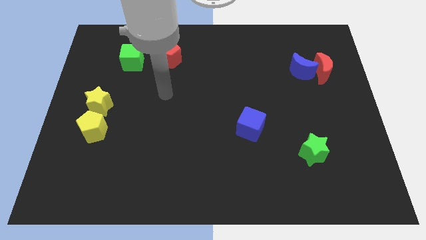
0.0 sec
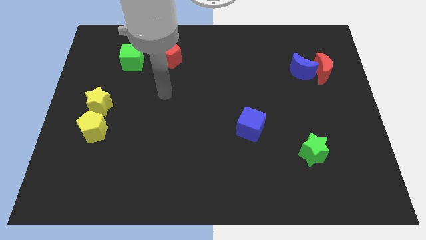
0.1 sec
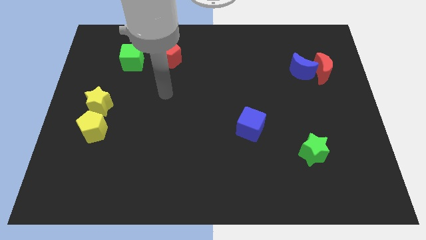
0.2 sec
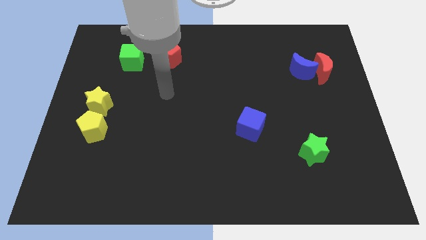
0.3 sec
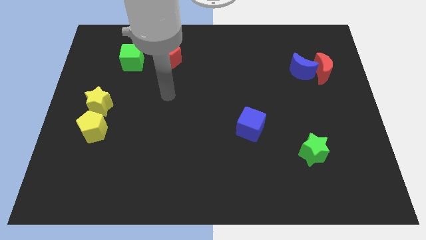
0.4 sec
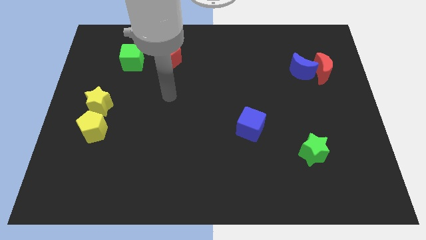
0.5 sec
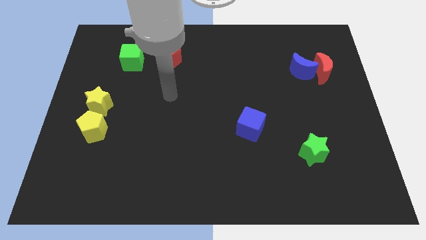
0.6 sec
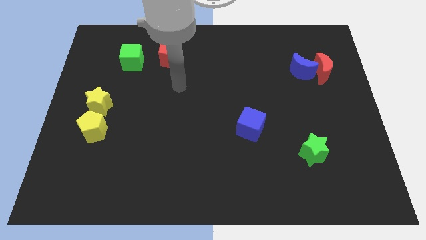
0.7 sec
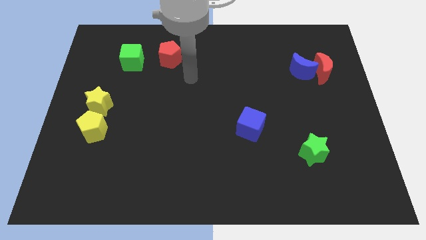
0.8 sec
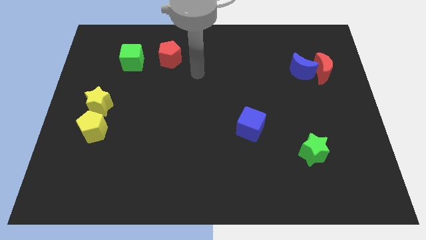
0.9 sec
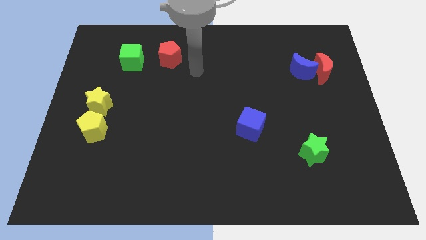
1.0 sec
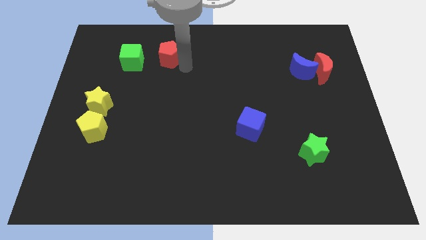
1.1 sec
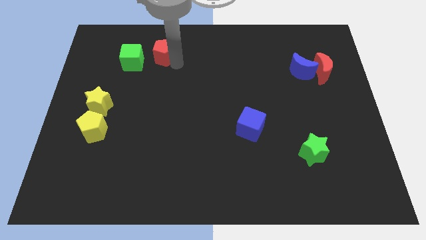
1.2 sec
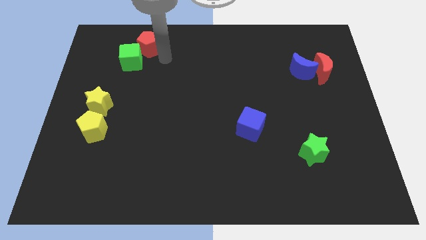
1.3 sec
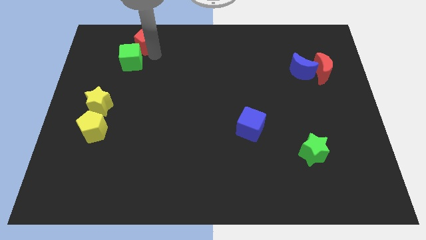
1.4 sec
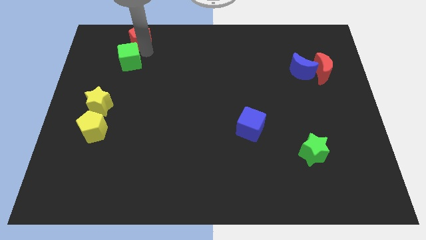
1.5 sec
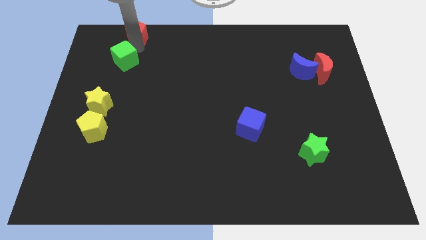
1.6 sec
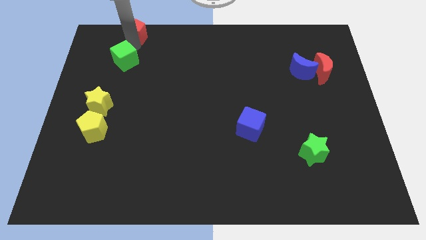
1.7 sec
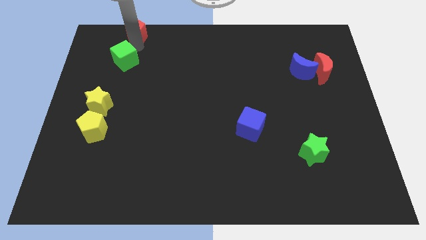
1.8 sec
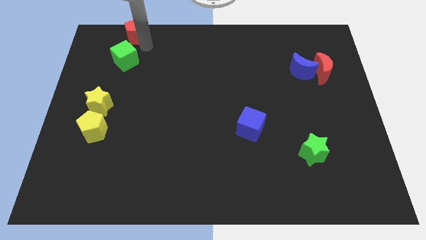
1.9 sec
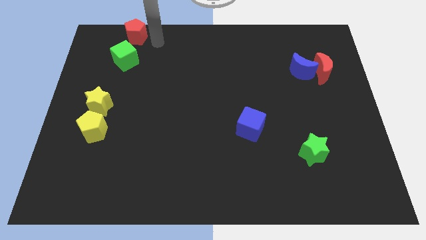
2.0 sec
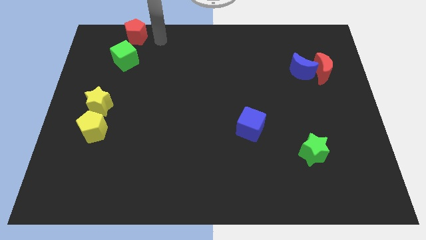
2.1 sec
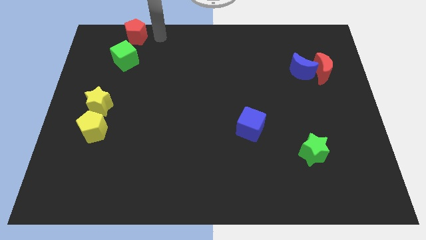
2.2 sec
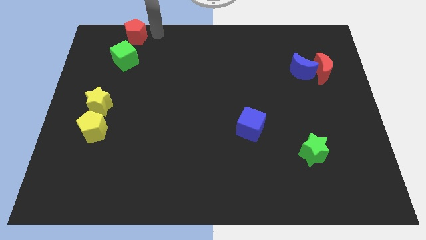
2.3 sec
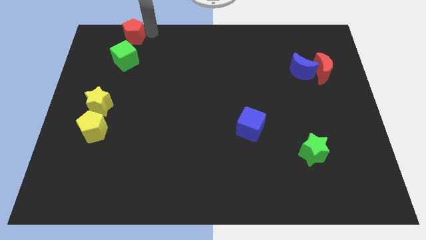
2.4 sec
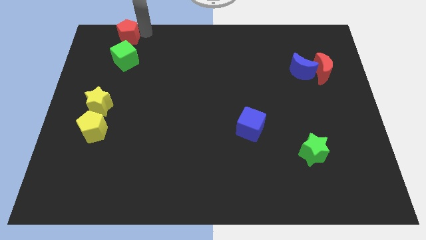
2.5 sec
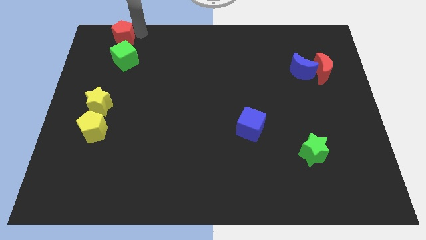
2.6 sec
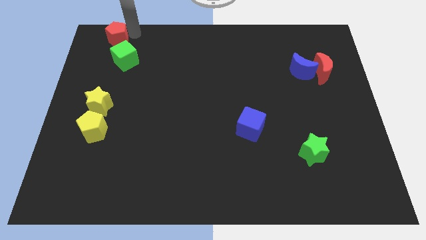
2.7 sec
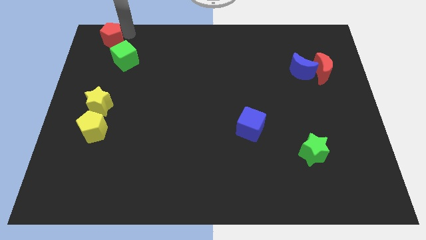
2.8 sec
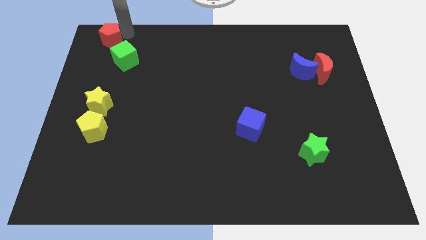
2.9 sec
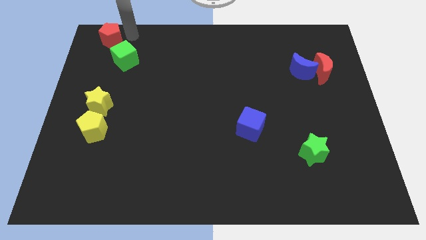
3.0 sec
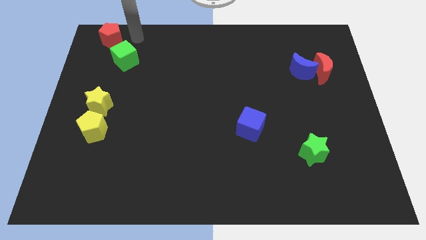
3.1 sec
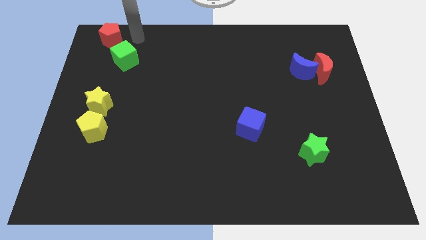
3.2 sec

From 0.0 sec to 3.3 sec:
drag red pentagon towards left side of the board

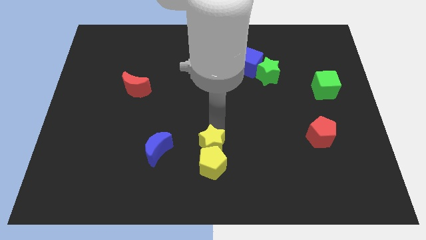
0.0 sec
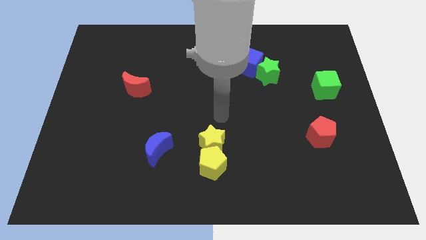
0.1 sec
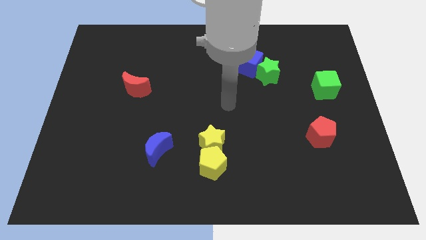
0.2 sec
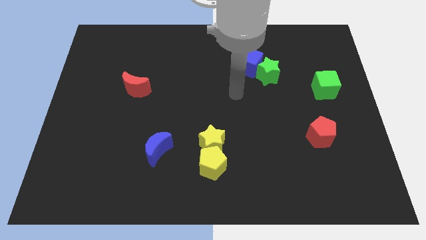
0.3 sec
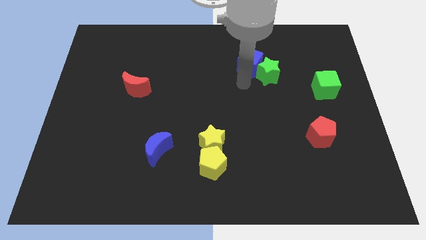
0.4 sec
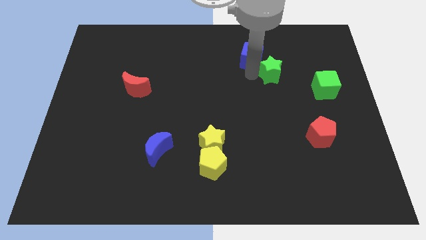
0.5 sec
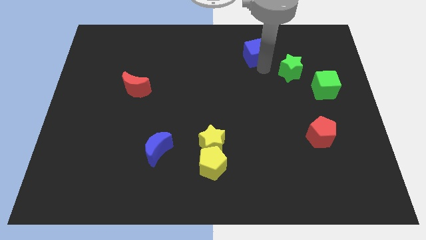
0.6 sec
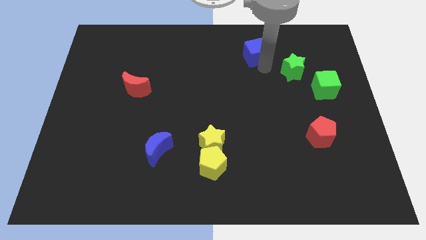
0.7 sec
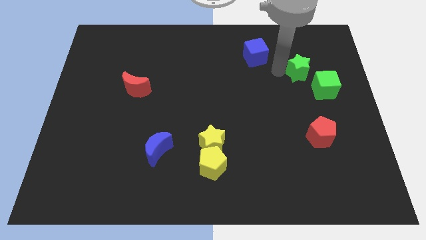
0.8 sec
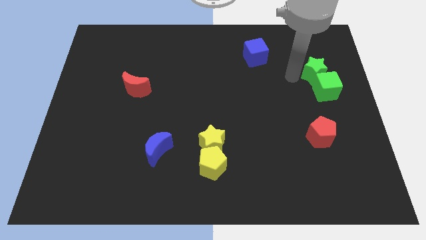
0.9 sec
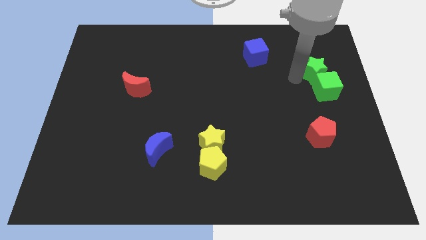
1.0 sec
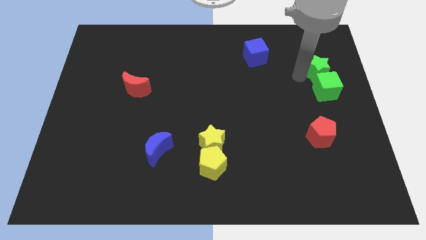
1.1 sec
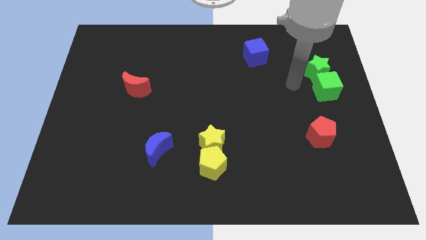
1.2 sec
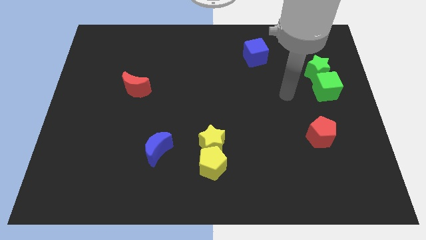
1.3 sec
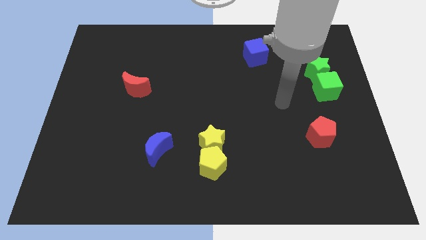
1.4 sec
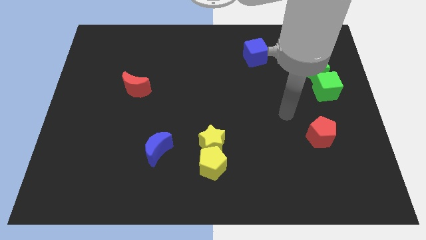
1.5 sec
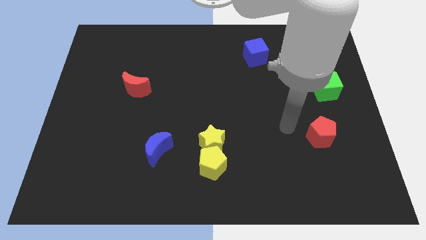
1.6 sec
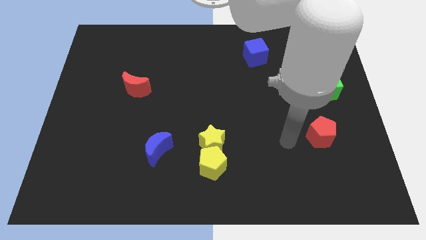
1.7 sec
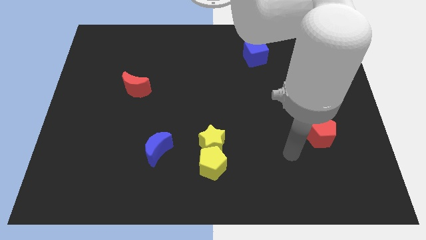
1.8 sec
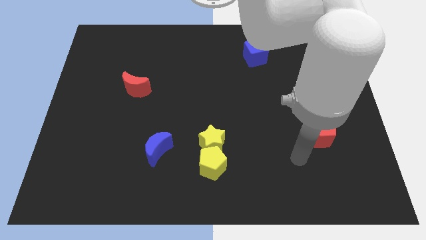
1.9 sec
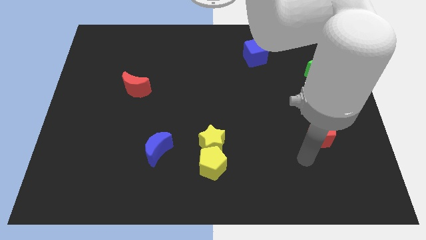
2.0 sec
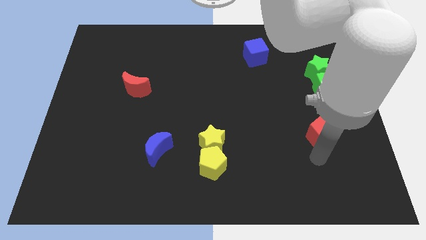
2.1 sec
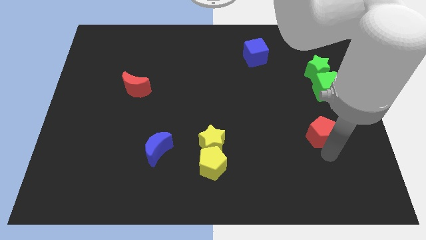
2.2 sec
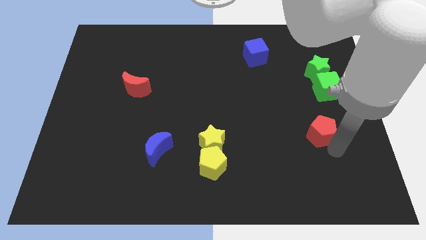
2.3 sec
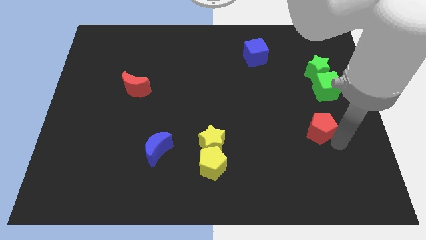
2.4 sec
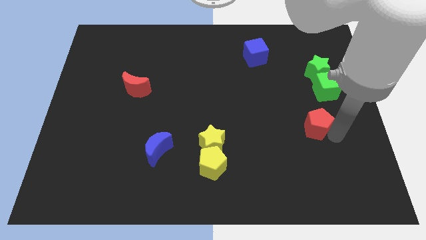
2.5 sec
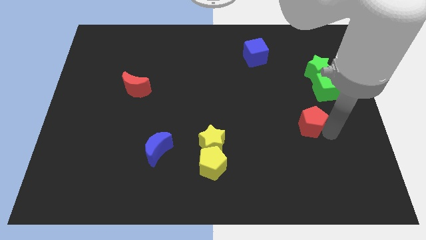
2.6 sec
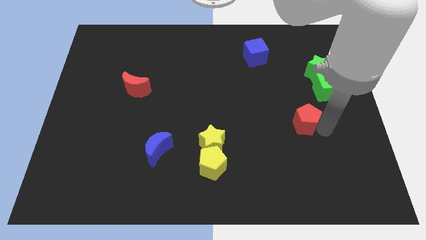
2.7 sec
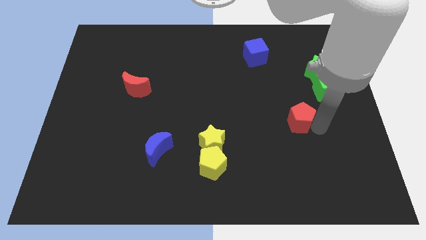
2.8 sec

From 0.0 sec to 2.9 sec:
drag the red pentagon slightly upwards

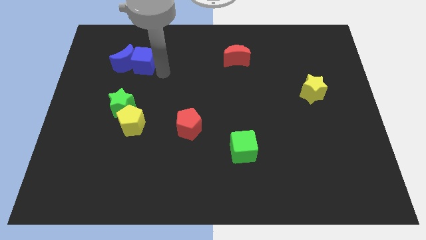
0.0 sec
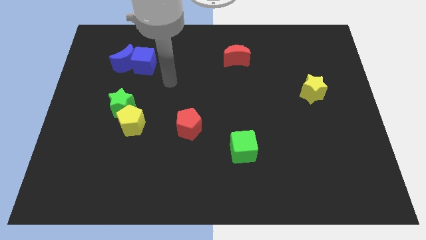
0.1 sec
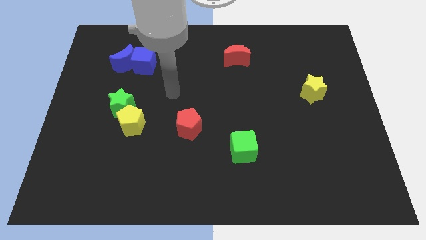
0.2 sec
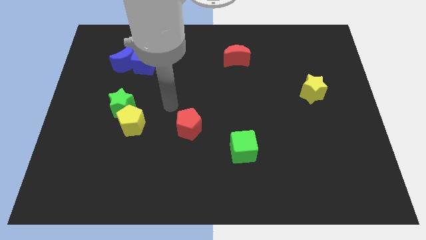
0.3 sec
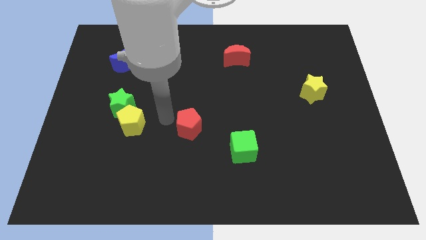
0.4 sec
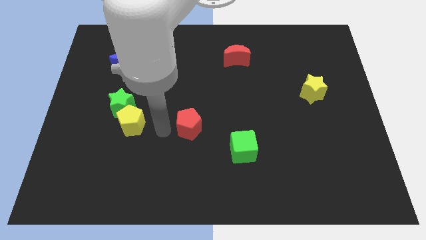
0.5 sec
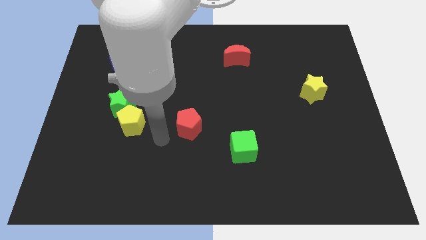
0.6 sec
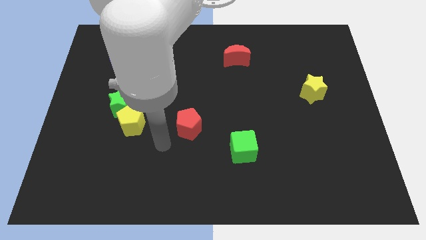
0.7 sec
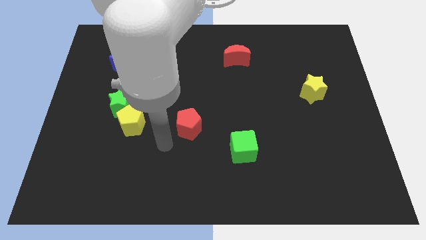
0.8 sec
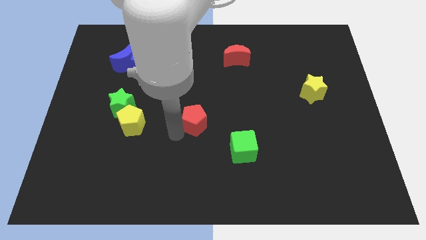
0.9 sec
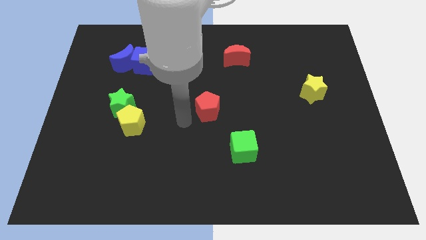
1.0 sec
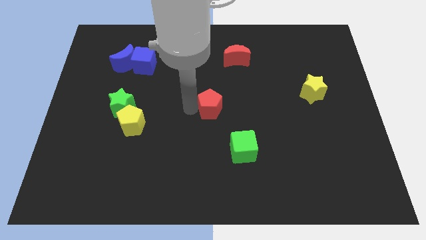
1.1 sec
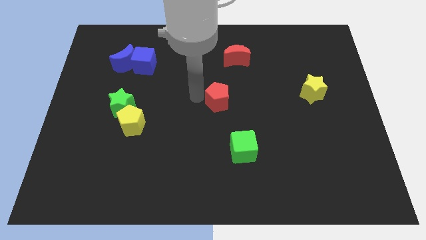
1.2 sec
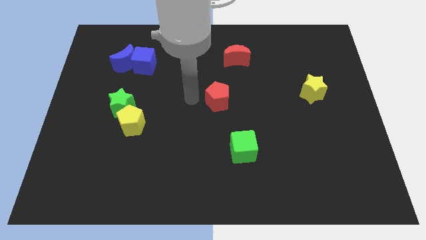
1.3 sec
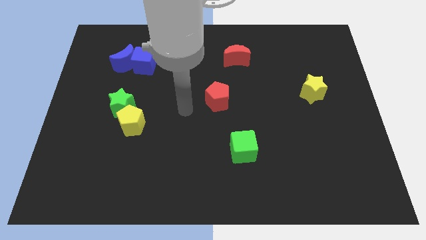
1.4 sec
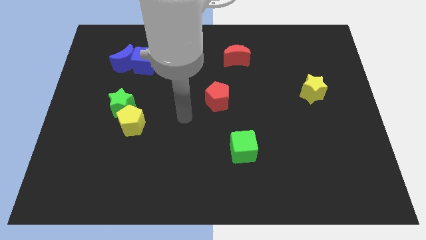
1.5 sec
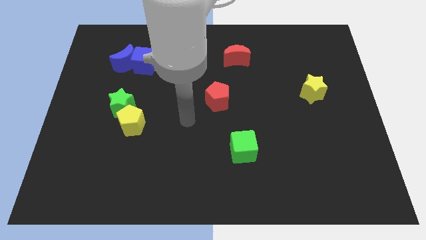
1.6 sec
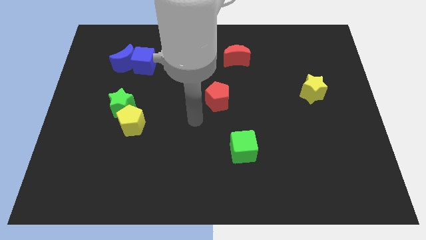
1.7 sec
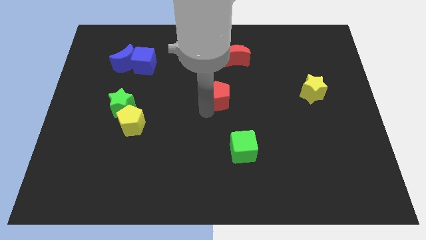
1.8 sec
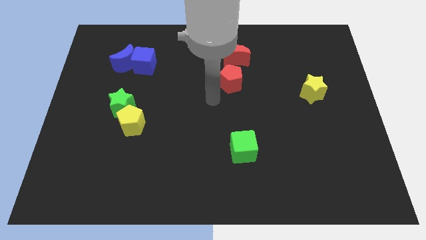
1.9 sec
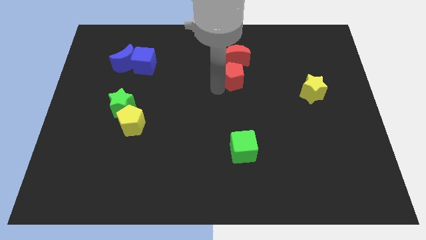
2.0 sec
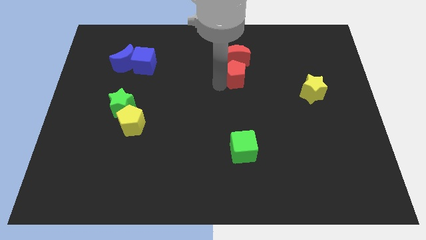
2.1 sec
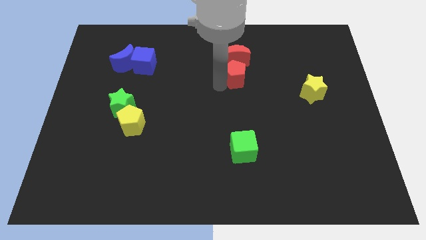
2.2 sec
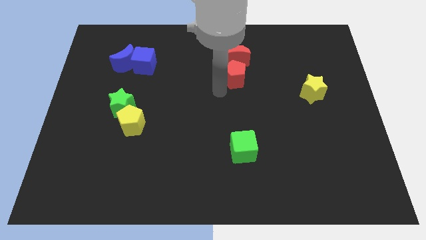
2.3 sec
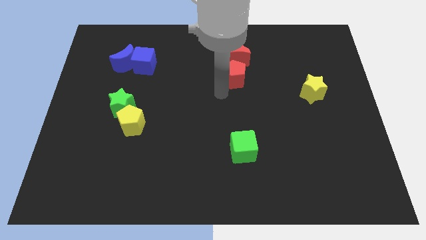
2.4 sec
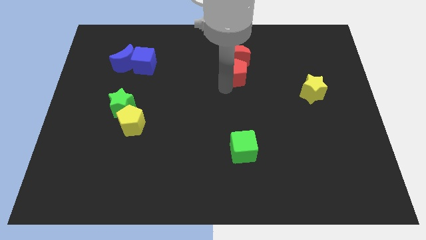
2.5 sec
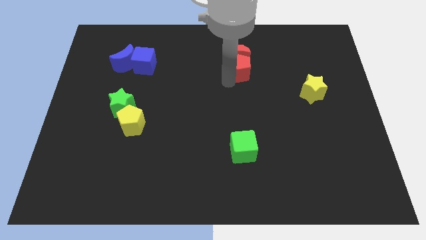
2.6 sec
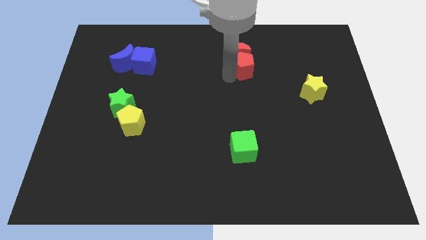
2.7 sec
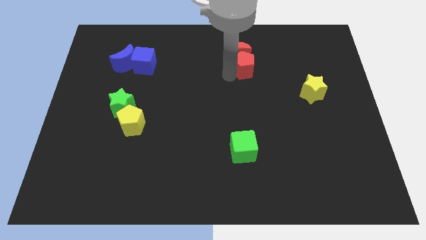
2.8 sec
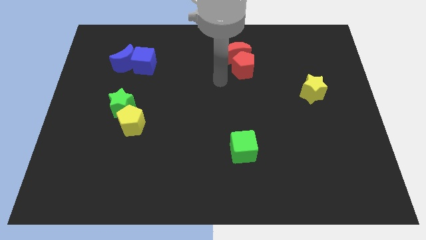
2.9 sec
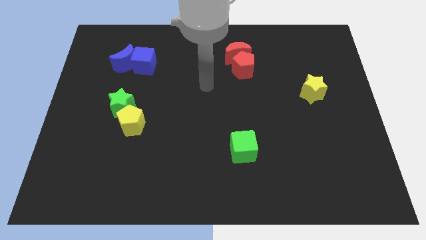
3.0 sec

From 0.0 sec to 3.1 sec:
place the red pentagon below the red crescent
